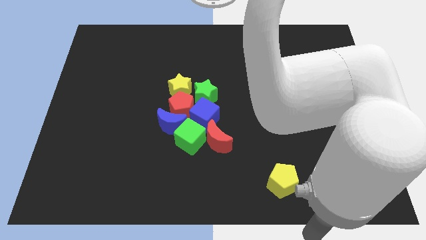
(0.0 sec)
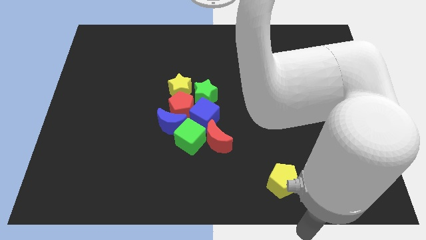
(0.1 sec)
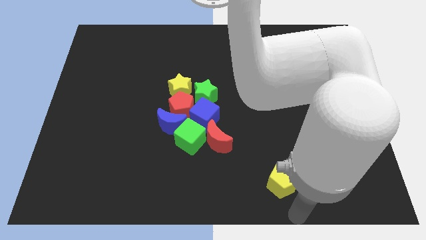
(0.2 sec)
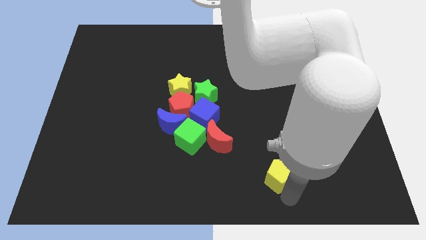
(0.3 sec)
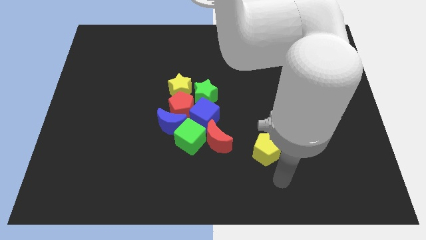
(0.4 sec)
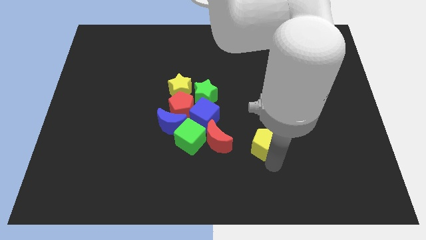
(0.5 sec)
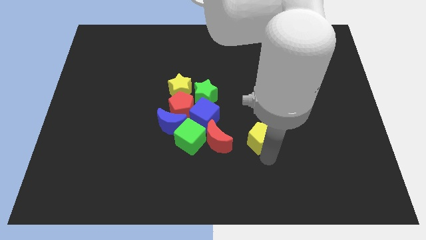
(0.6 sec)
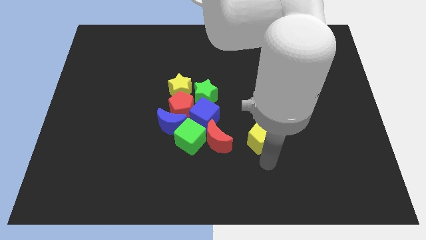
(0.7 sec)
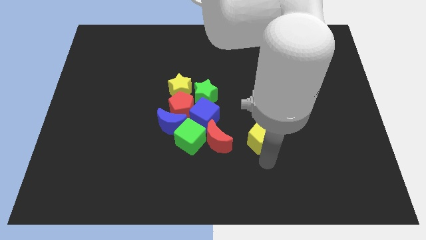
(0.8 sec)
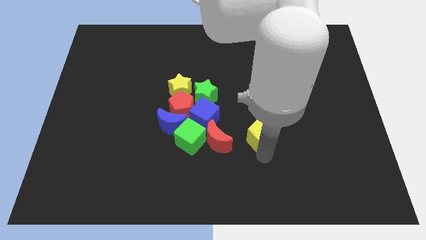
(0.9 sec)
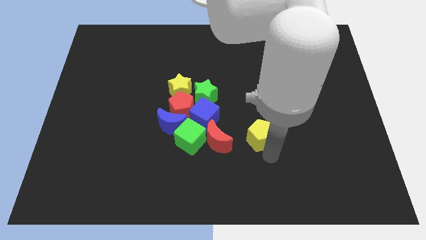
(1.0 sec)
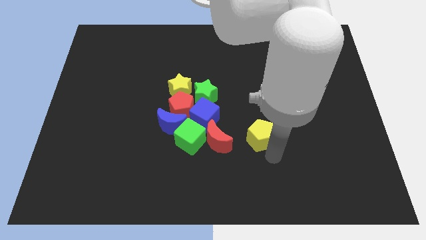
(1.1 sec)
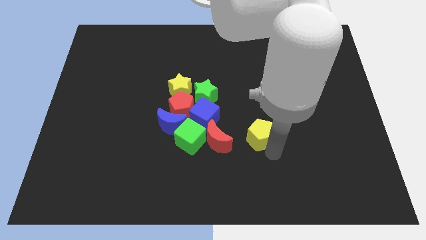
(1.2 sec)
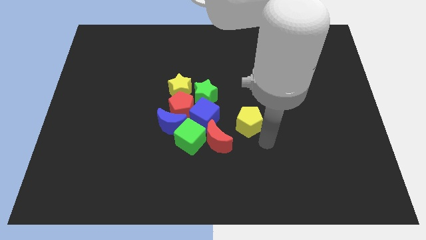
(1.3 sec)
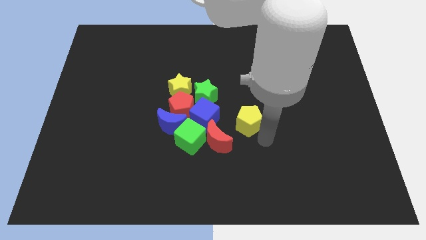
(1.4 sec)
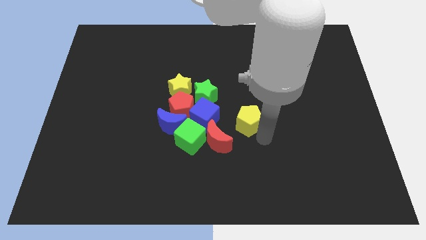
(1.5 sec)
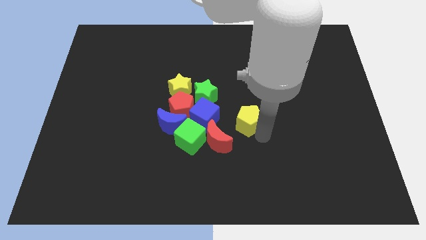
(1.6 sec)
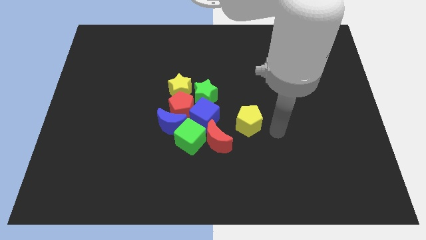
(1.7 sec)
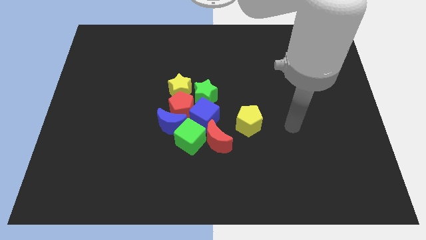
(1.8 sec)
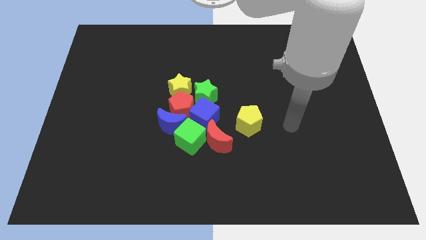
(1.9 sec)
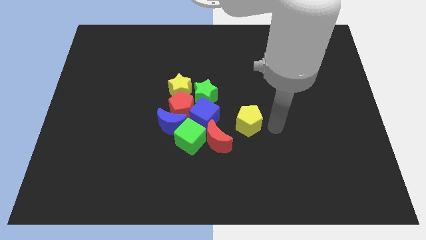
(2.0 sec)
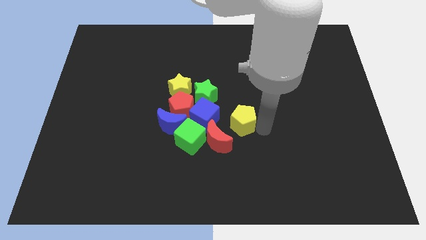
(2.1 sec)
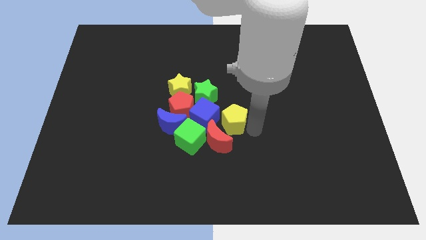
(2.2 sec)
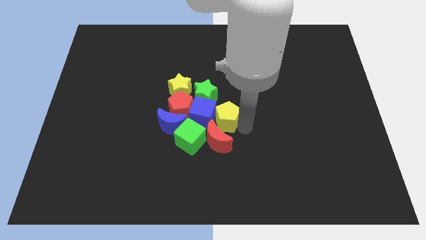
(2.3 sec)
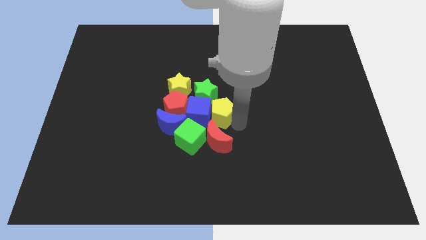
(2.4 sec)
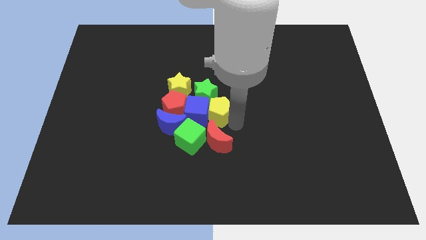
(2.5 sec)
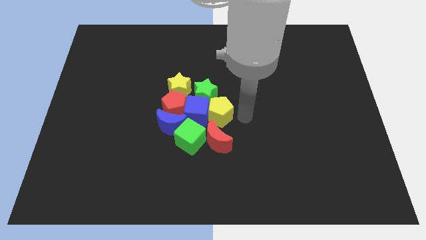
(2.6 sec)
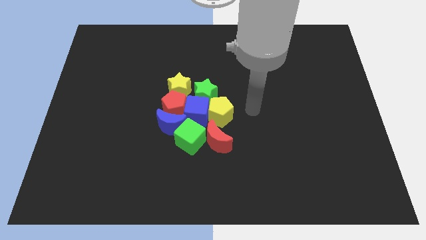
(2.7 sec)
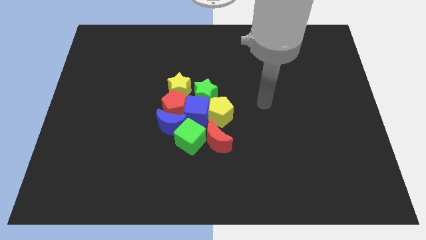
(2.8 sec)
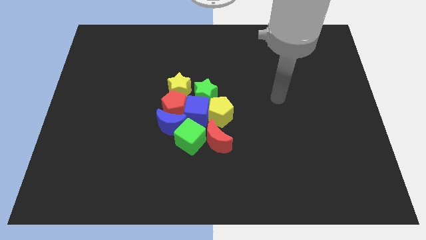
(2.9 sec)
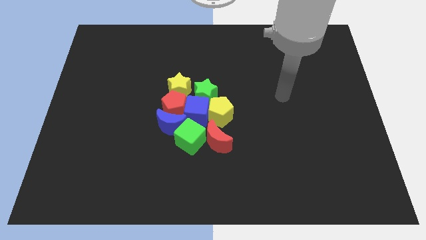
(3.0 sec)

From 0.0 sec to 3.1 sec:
push the yellow pentagon into the blue cube

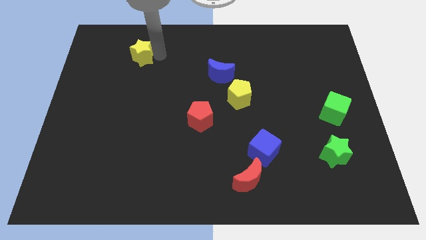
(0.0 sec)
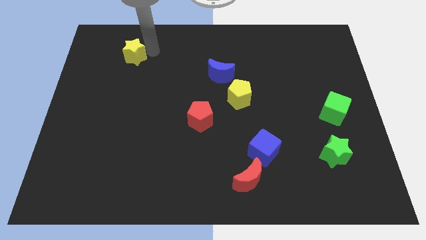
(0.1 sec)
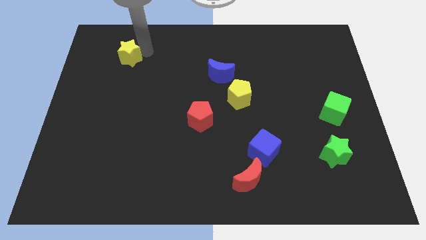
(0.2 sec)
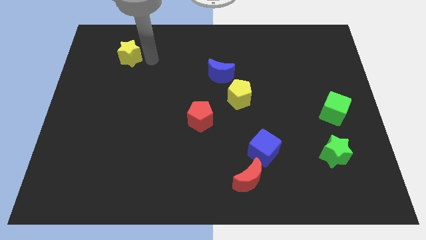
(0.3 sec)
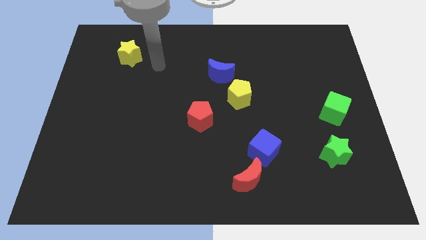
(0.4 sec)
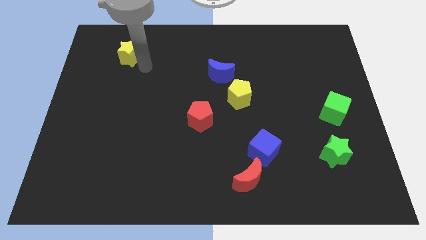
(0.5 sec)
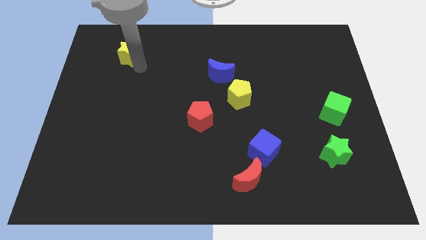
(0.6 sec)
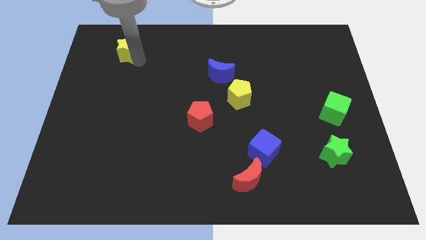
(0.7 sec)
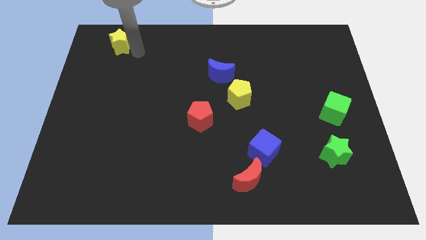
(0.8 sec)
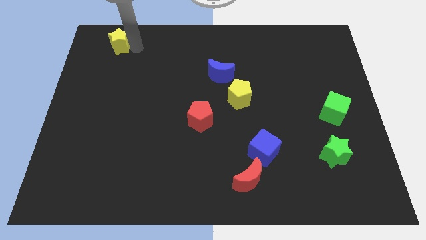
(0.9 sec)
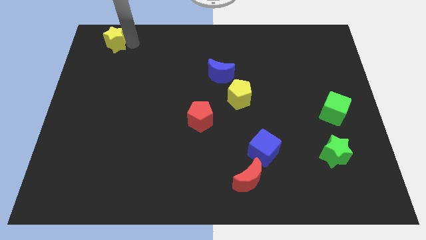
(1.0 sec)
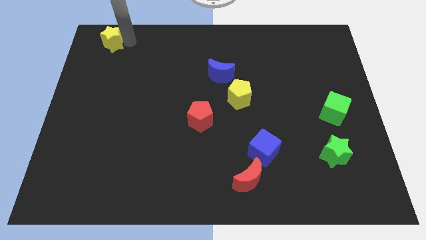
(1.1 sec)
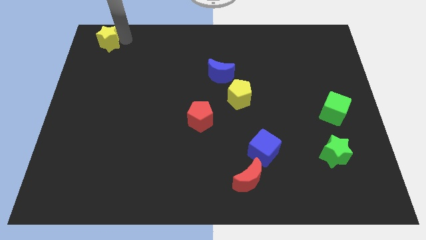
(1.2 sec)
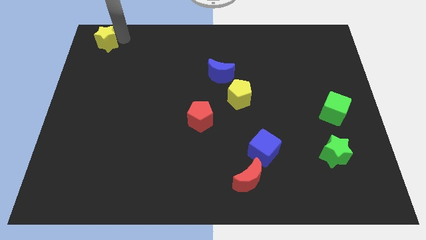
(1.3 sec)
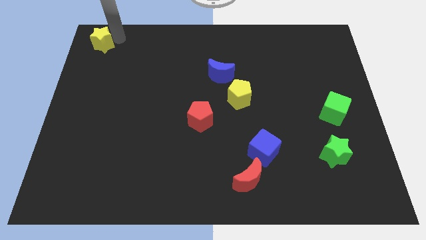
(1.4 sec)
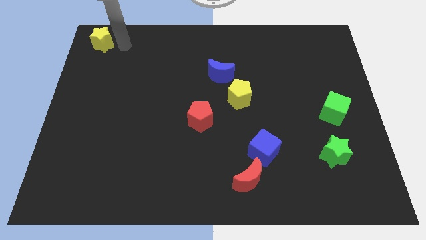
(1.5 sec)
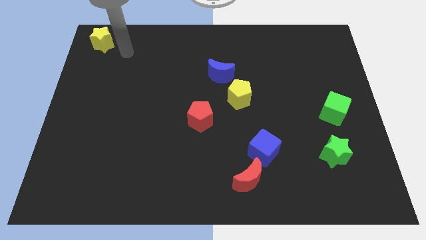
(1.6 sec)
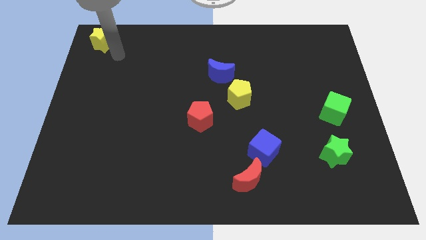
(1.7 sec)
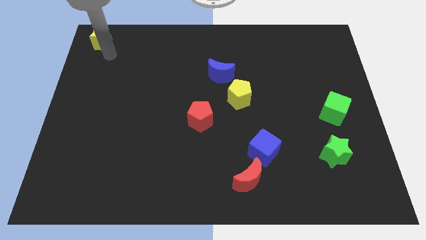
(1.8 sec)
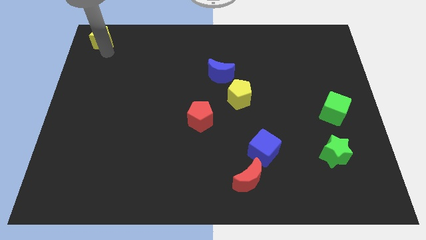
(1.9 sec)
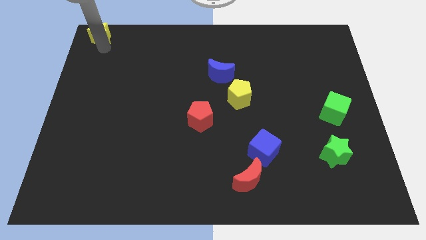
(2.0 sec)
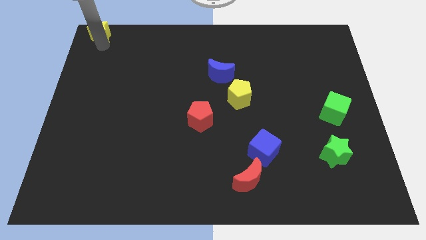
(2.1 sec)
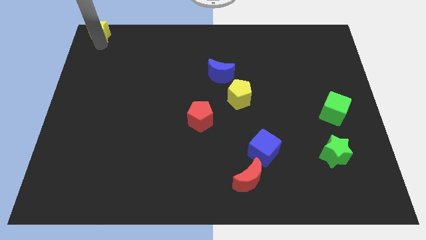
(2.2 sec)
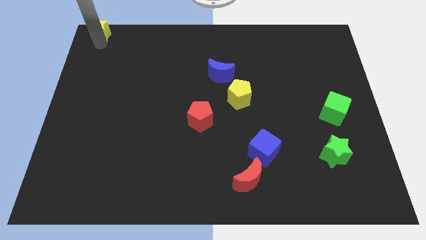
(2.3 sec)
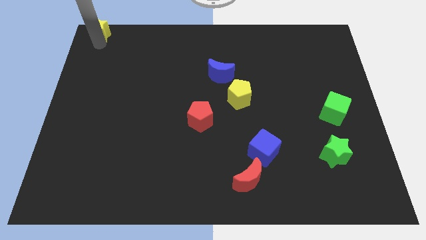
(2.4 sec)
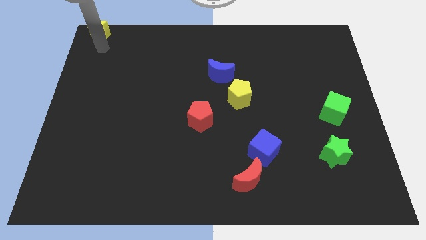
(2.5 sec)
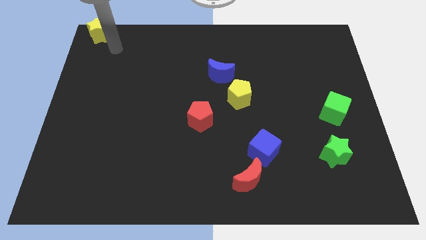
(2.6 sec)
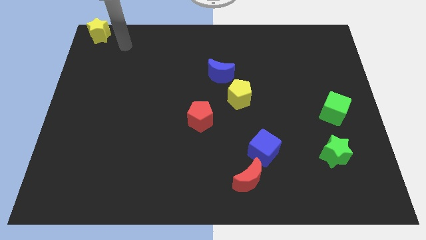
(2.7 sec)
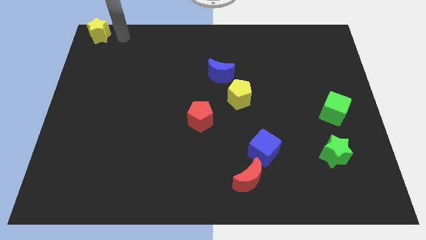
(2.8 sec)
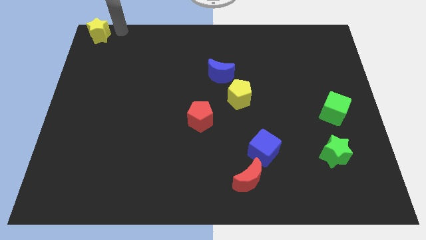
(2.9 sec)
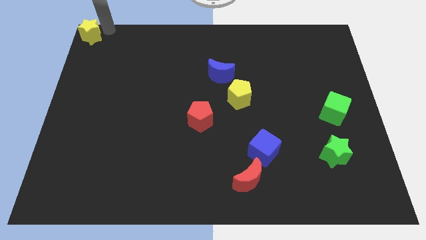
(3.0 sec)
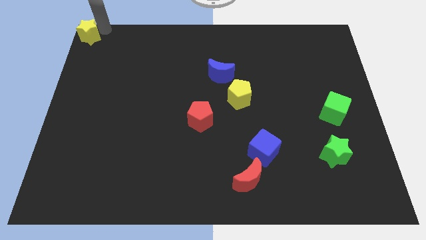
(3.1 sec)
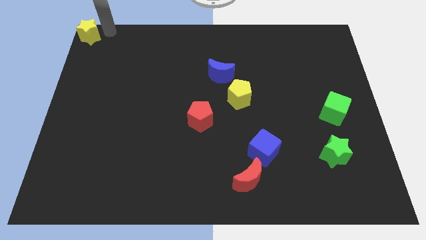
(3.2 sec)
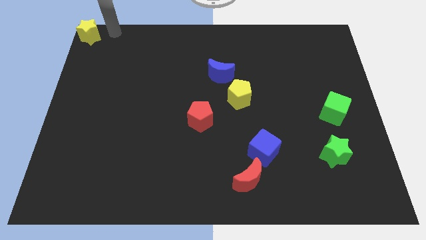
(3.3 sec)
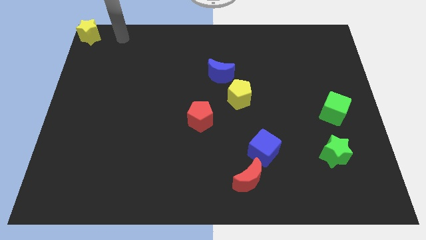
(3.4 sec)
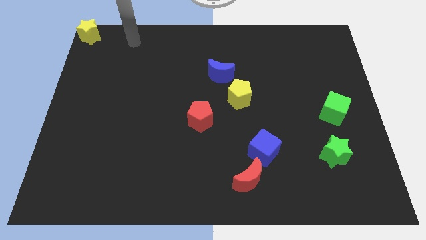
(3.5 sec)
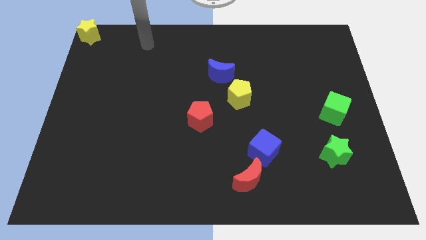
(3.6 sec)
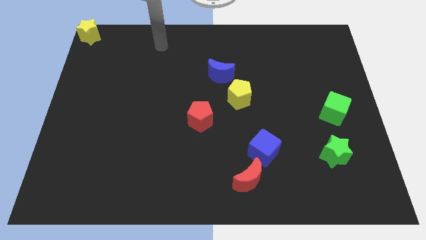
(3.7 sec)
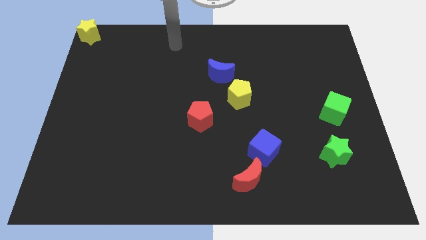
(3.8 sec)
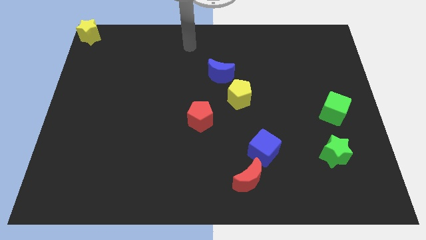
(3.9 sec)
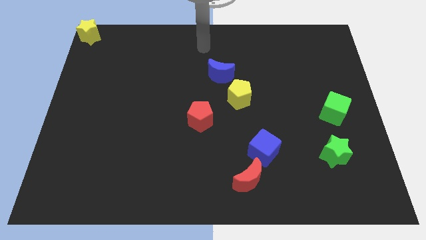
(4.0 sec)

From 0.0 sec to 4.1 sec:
push yellow star to top left corner

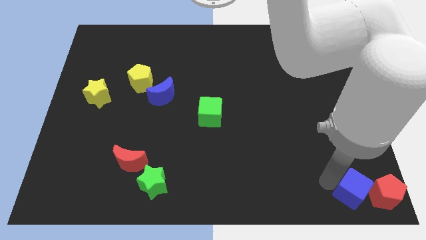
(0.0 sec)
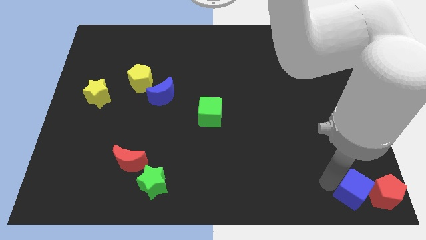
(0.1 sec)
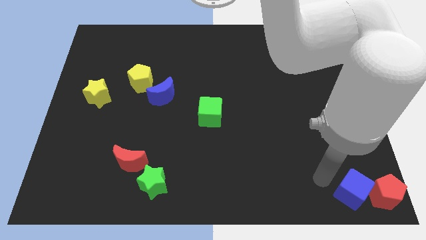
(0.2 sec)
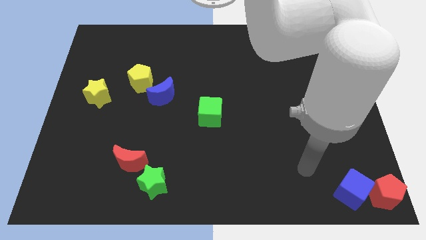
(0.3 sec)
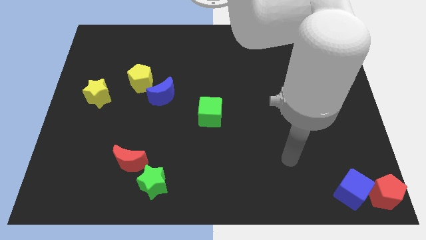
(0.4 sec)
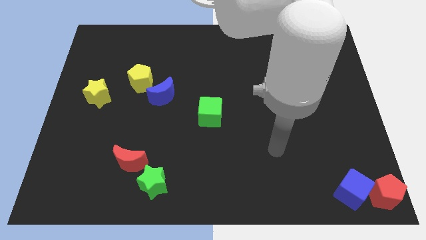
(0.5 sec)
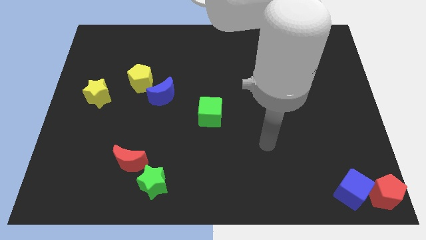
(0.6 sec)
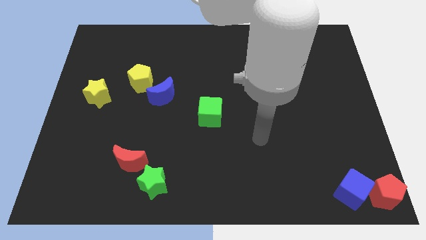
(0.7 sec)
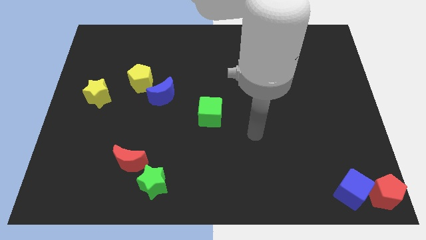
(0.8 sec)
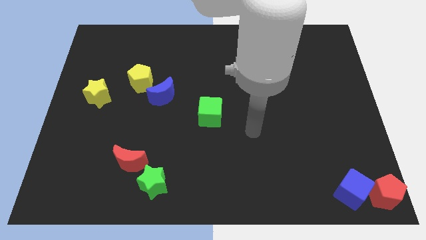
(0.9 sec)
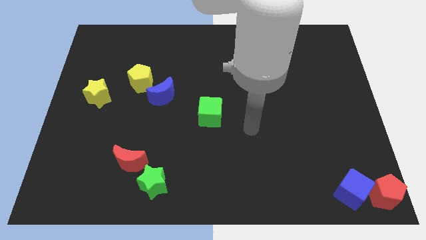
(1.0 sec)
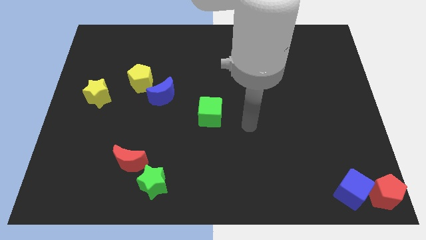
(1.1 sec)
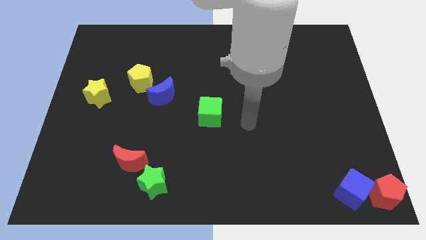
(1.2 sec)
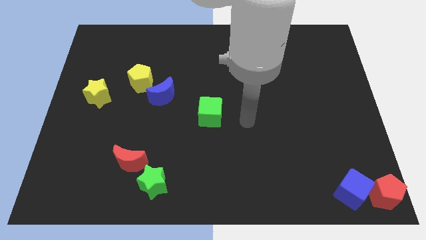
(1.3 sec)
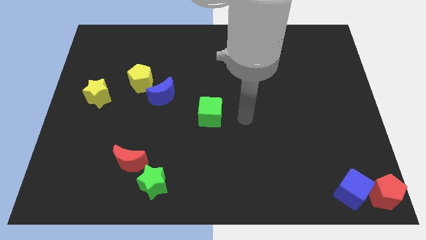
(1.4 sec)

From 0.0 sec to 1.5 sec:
move the arm to the right of the green cube

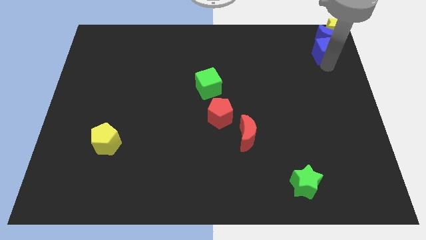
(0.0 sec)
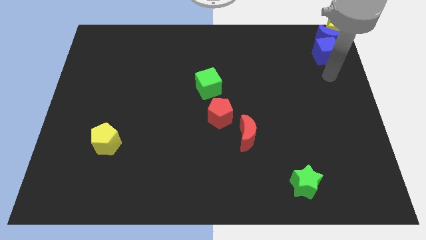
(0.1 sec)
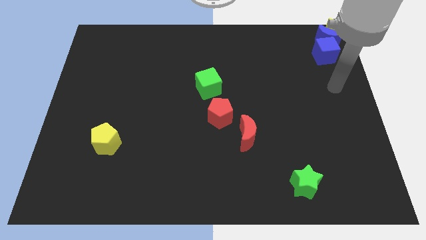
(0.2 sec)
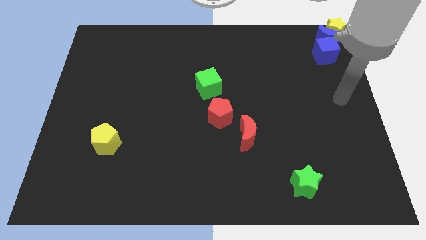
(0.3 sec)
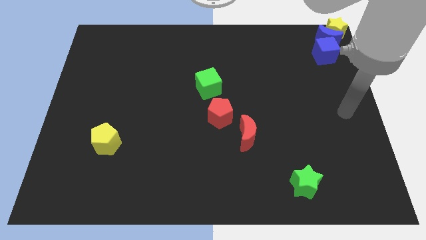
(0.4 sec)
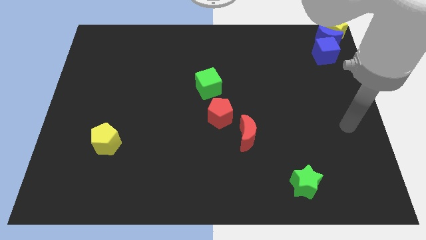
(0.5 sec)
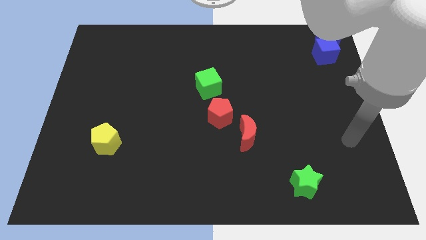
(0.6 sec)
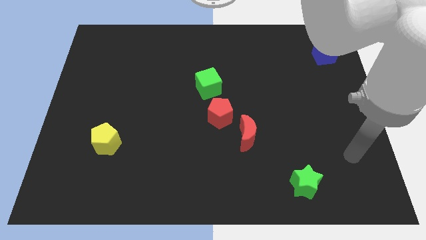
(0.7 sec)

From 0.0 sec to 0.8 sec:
move arm away from blue cube
